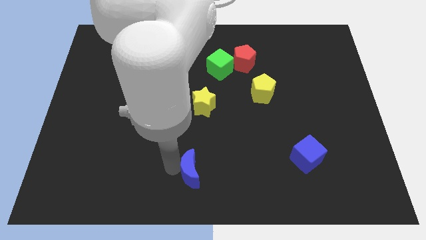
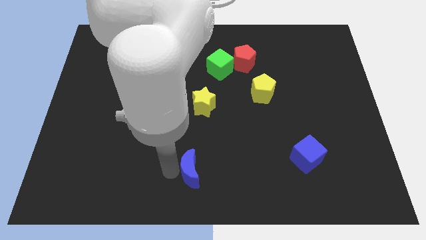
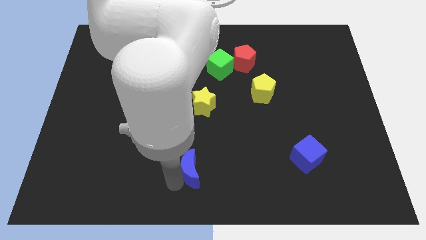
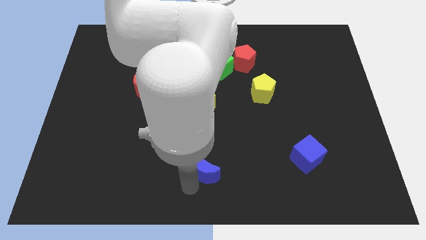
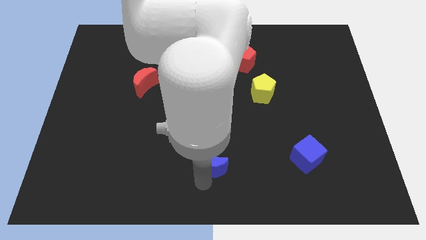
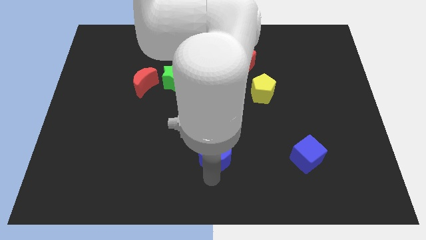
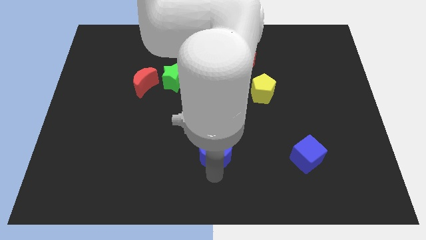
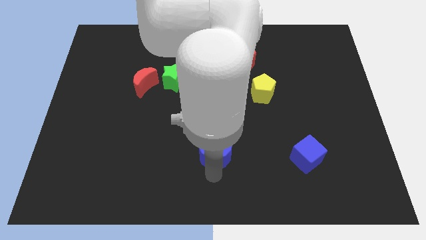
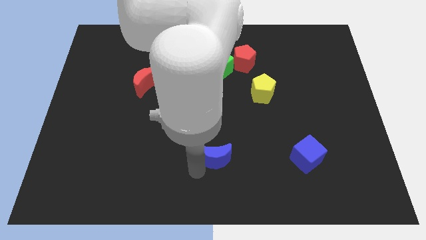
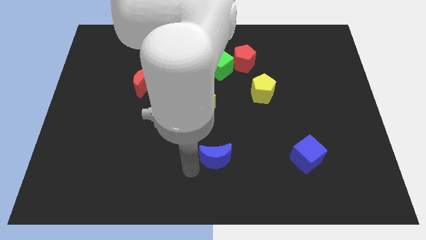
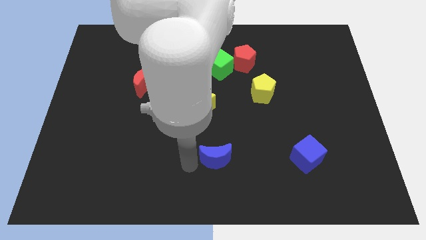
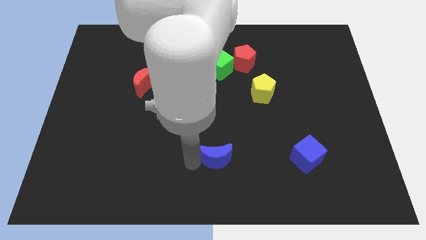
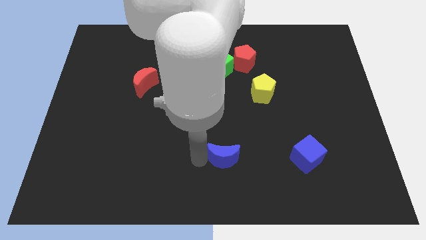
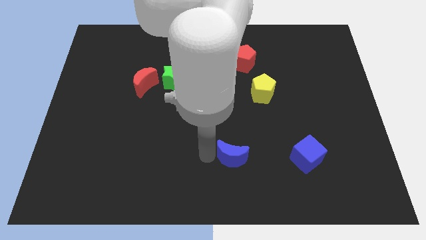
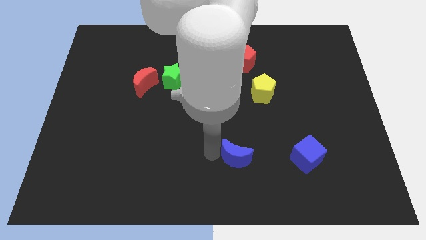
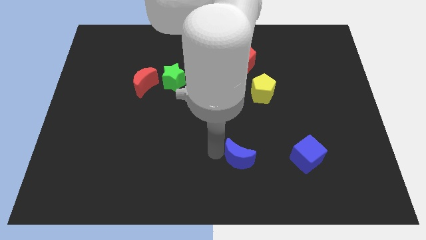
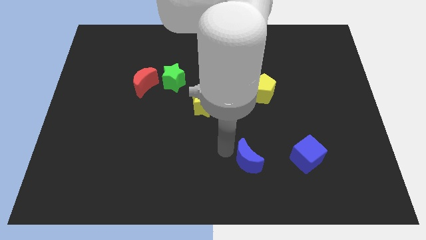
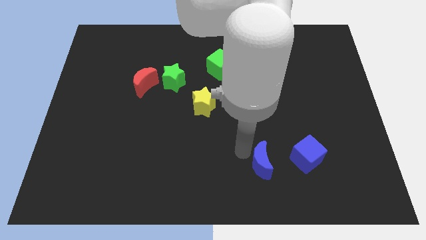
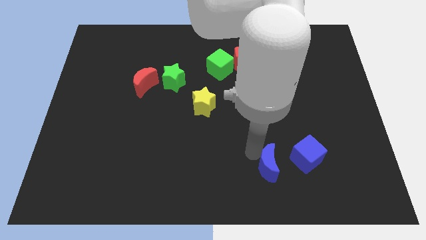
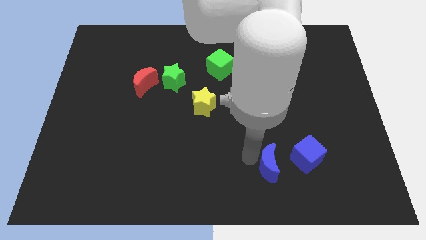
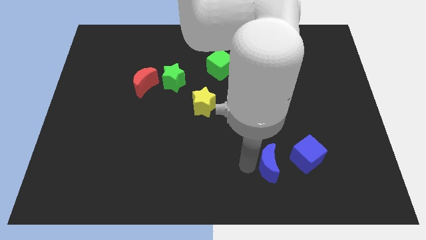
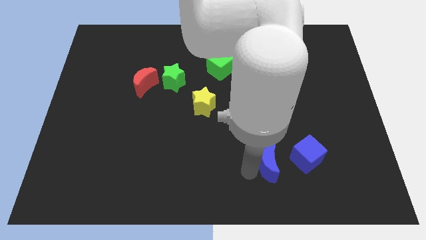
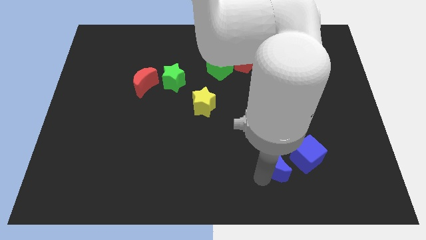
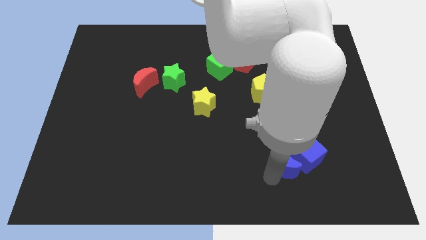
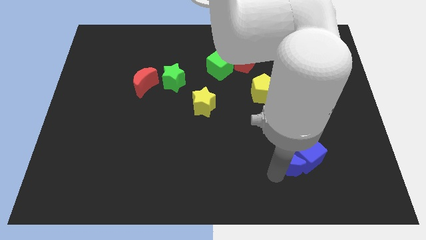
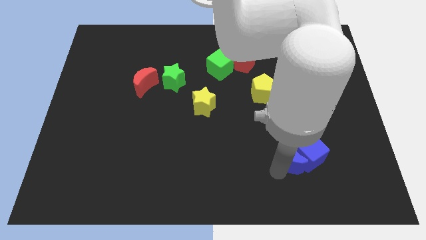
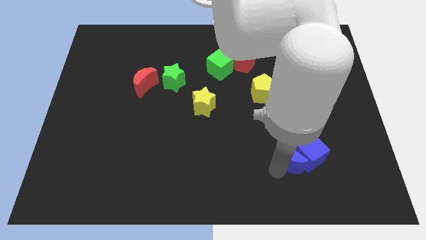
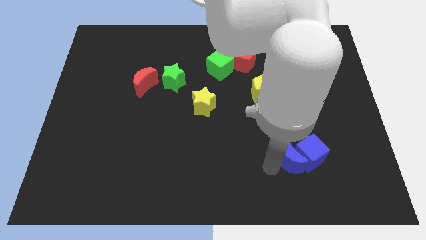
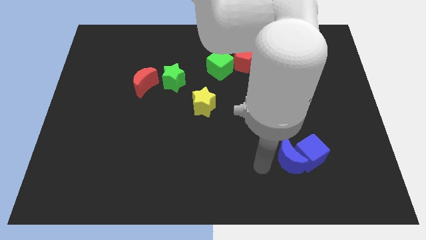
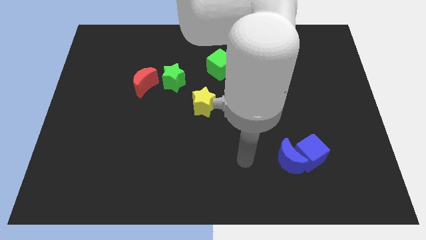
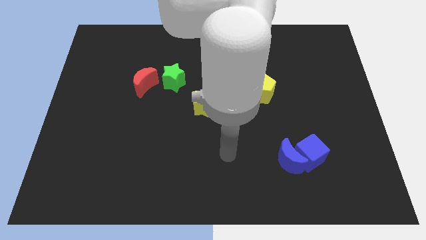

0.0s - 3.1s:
push the blue crescent into the blue cube

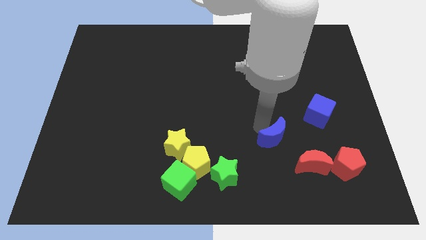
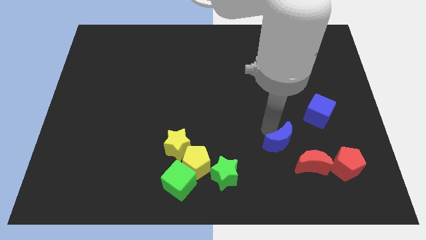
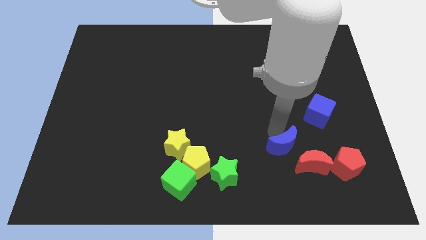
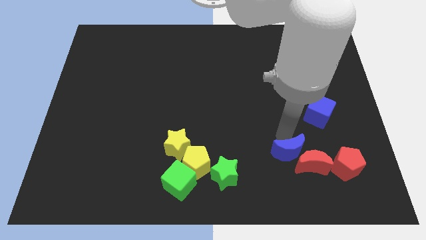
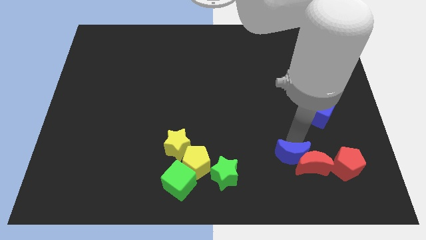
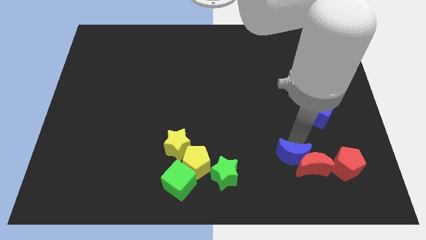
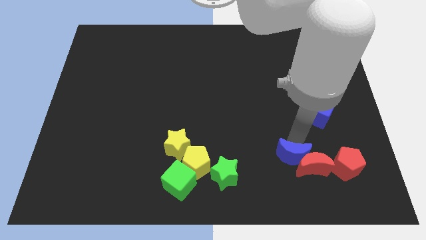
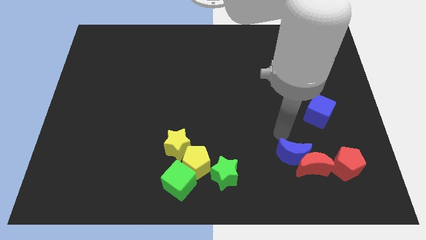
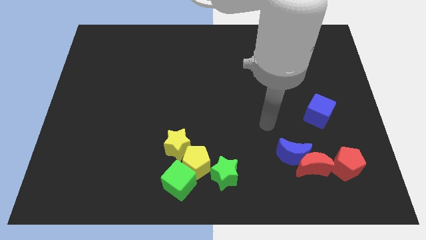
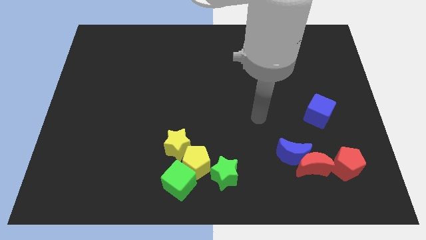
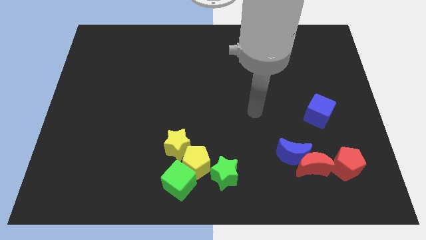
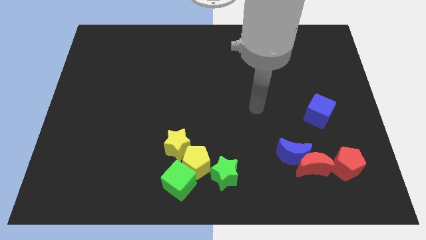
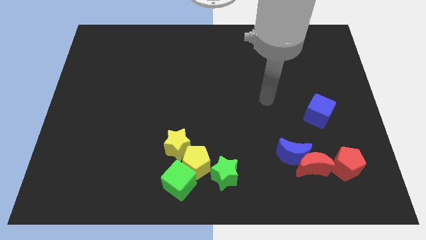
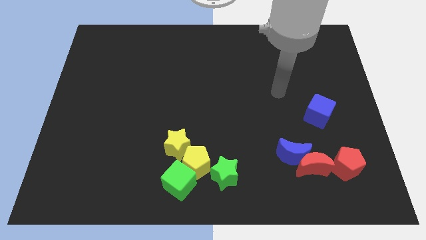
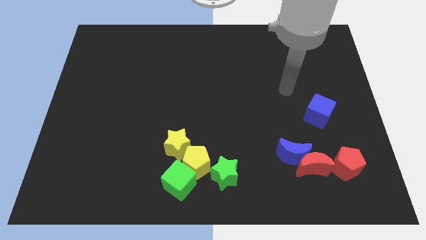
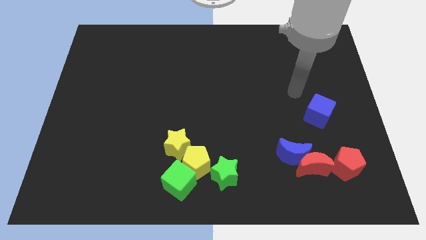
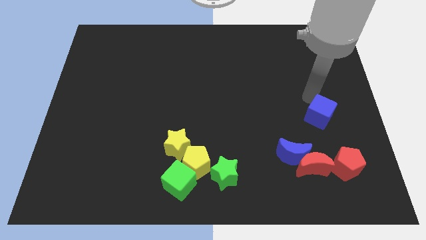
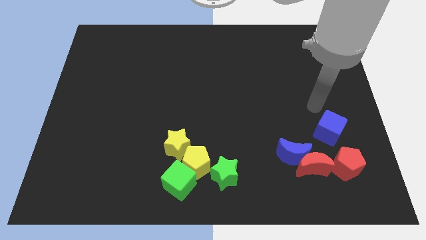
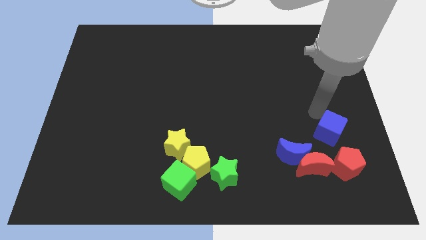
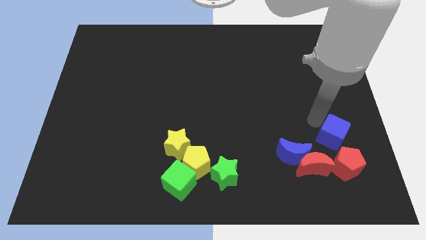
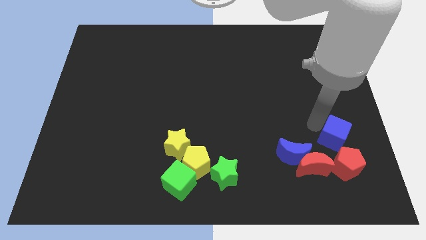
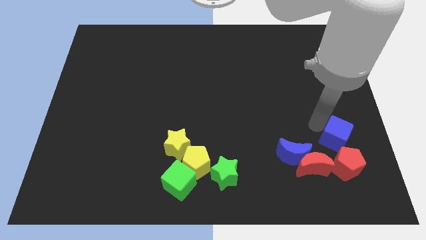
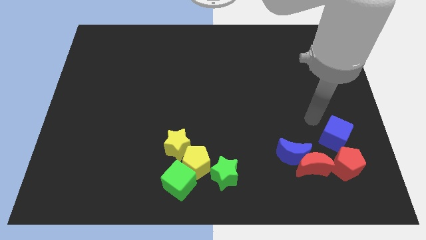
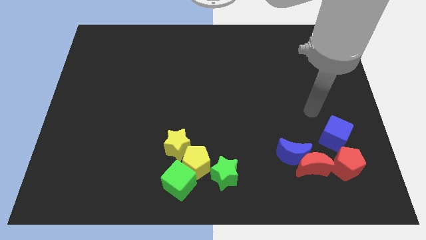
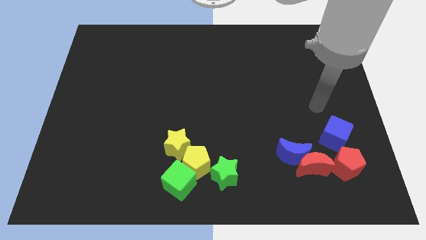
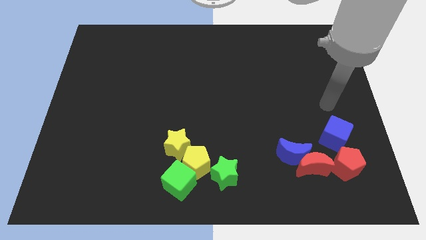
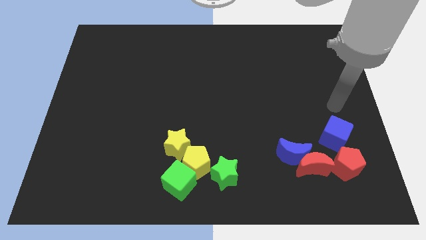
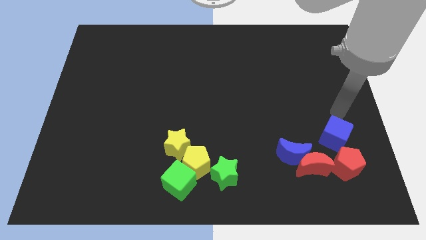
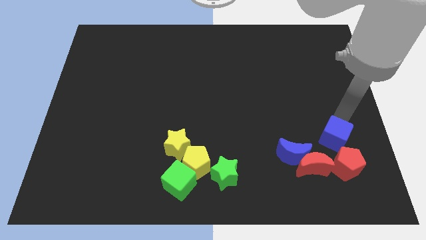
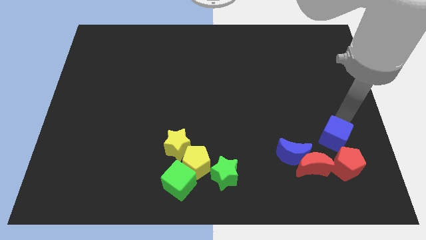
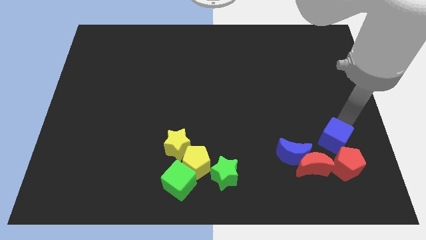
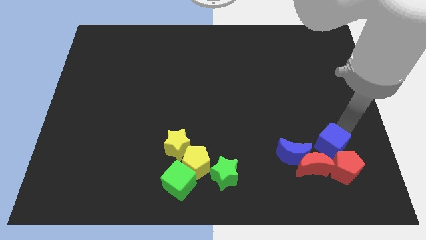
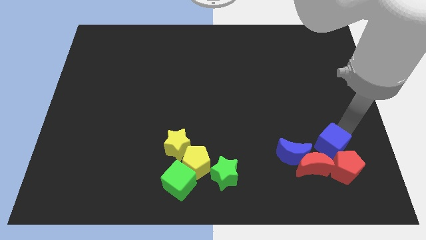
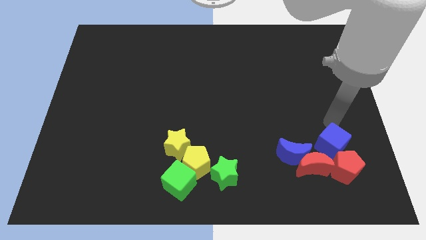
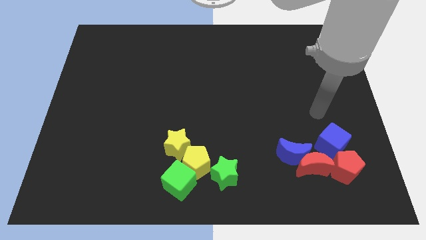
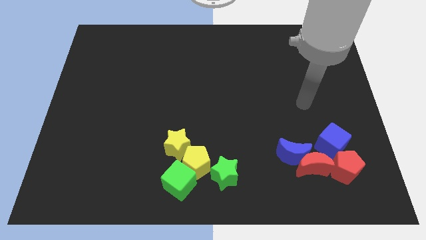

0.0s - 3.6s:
place the blue blocks to the top of the red blocks

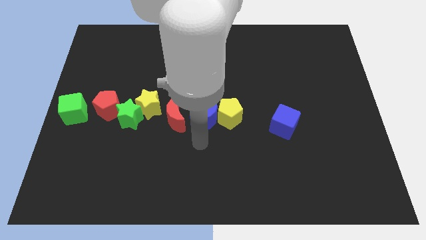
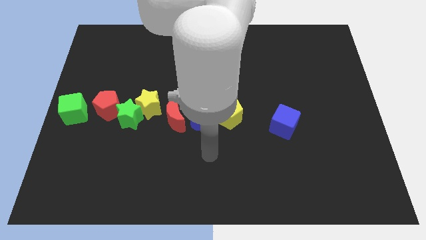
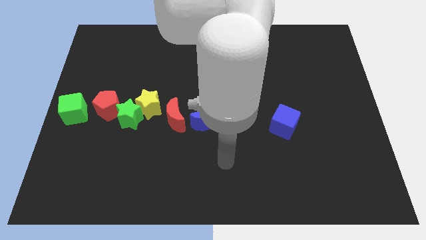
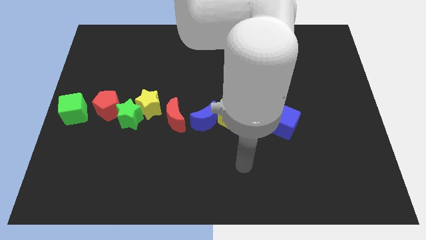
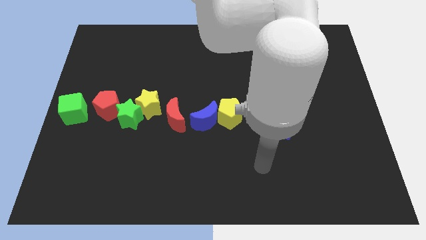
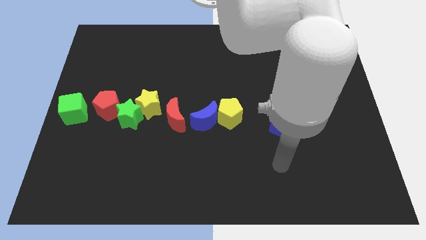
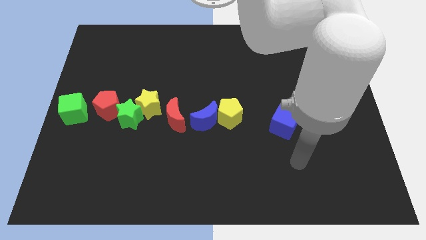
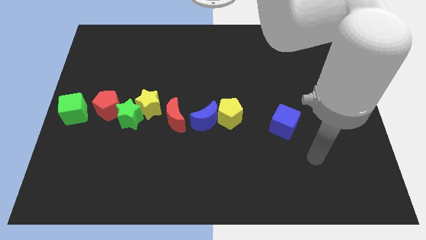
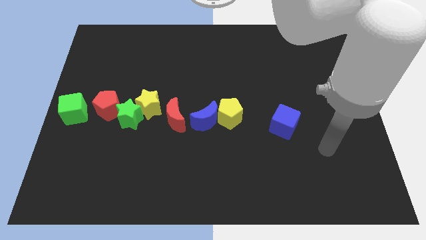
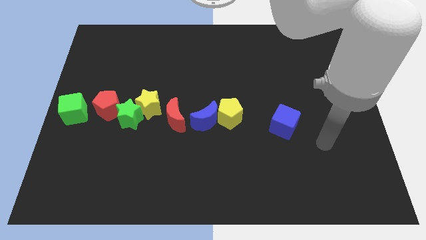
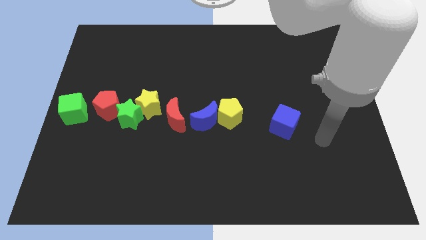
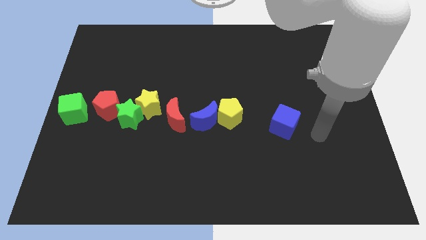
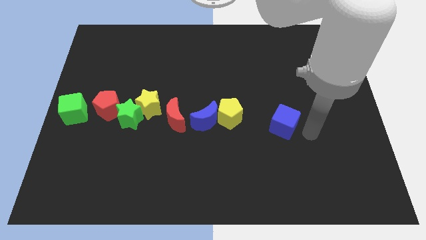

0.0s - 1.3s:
move your arm to the right side of the blue cube

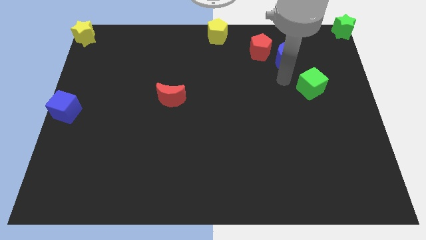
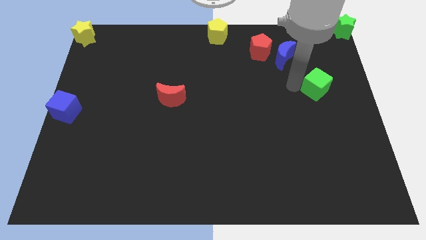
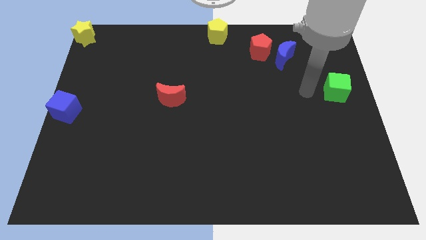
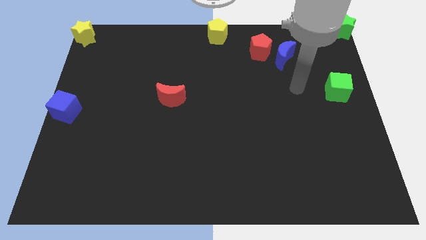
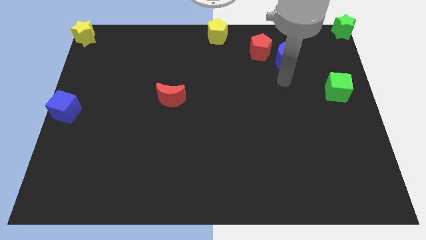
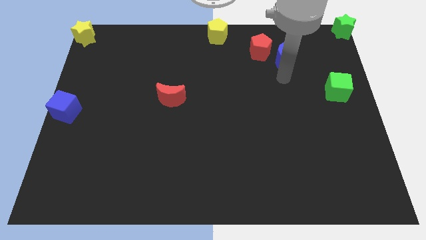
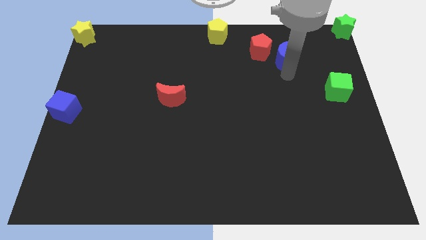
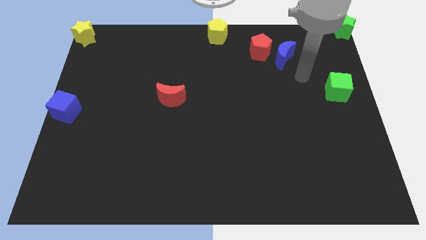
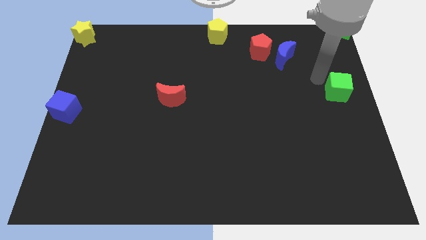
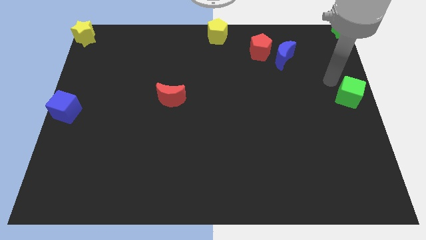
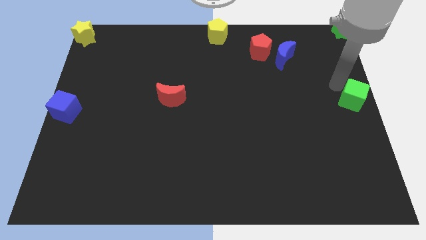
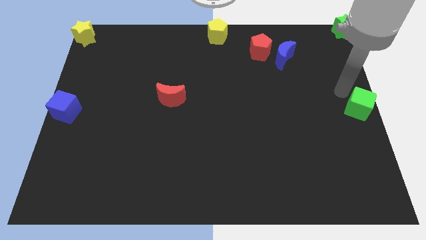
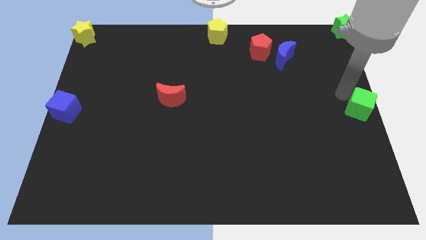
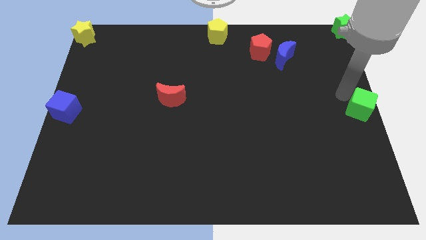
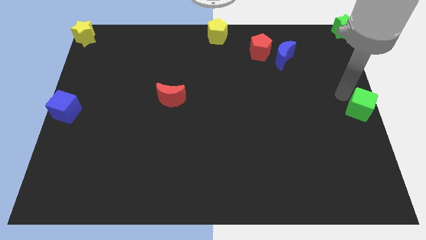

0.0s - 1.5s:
move the green cube to the right center of the board
